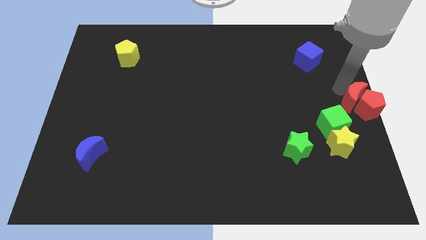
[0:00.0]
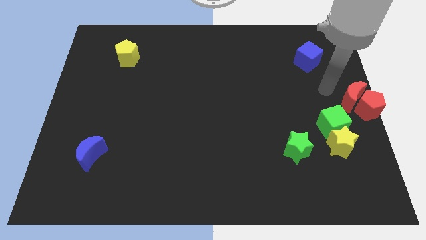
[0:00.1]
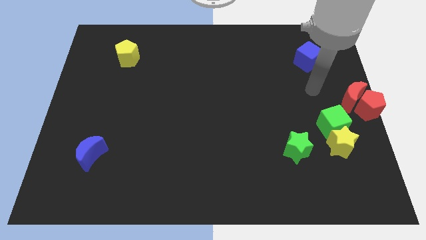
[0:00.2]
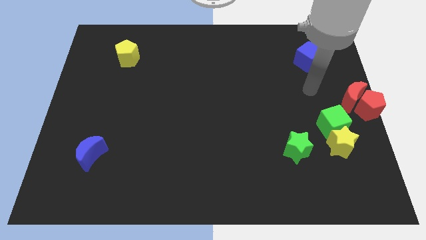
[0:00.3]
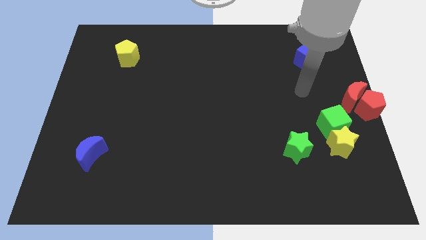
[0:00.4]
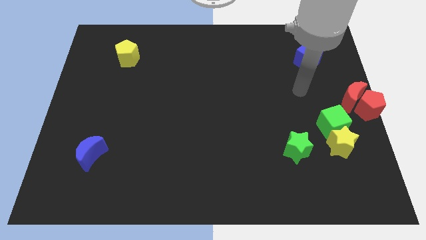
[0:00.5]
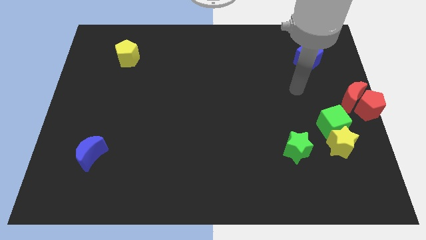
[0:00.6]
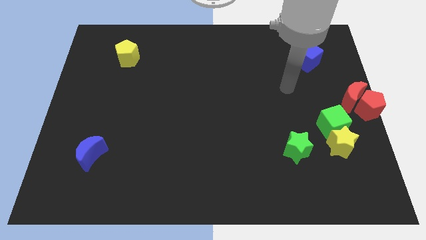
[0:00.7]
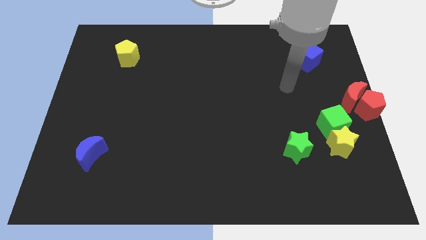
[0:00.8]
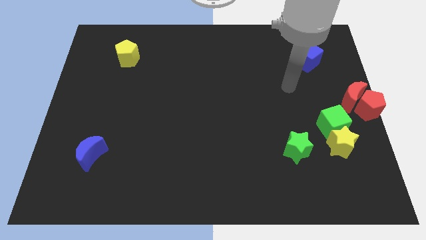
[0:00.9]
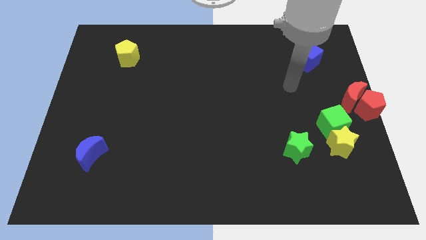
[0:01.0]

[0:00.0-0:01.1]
move your arm away from the red moon

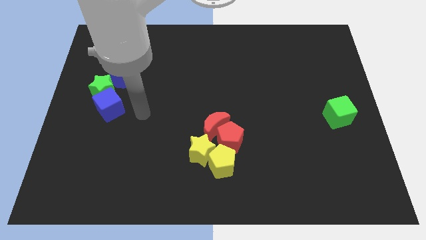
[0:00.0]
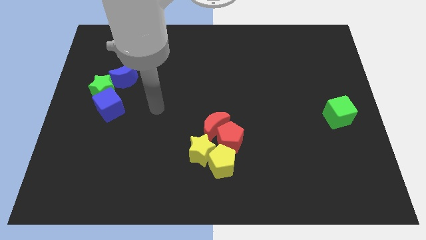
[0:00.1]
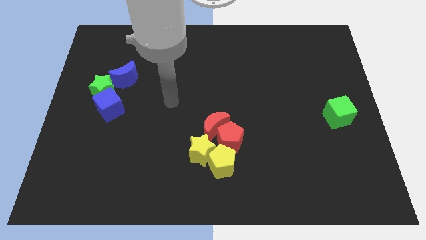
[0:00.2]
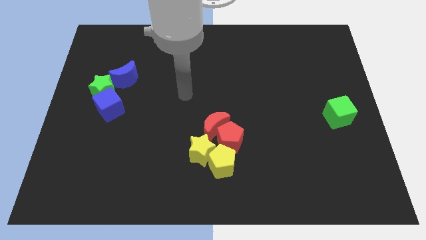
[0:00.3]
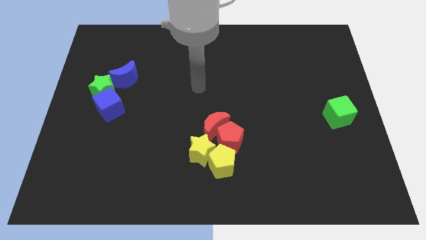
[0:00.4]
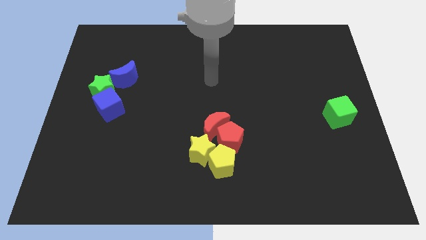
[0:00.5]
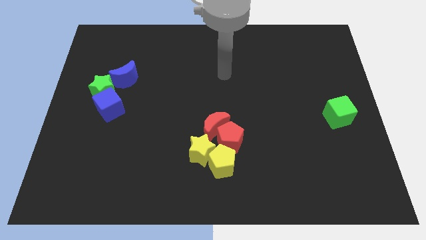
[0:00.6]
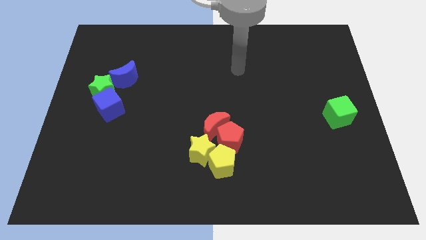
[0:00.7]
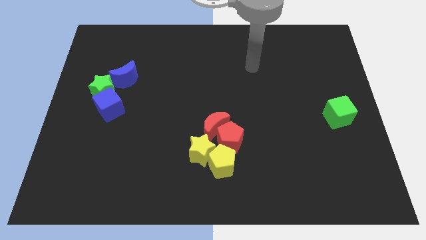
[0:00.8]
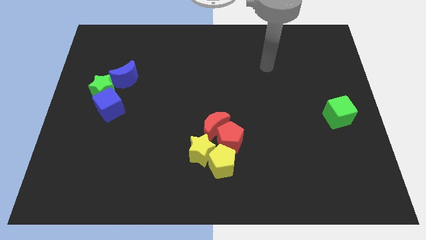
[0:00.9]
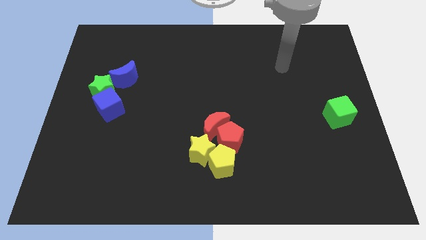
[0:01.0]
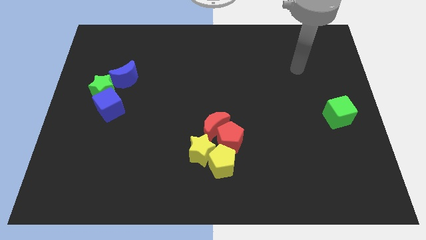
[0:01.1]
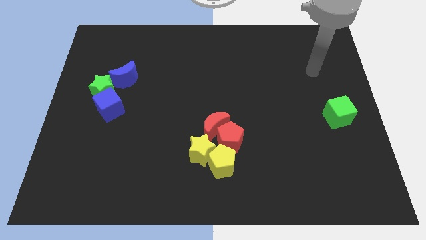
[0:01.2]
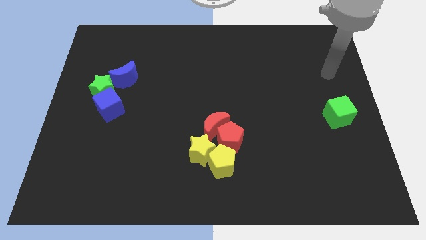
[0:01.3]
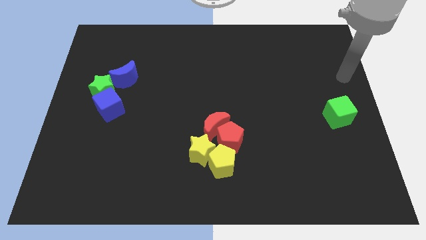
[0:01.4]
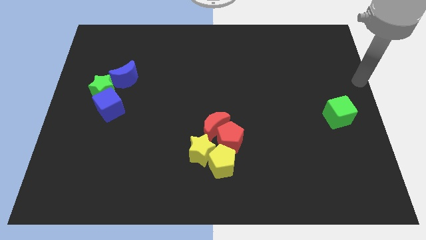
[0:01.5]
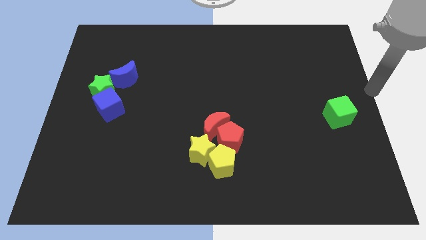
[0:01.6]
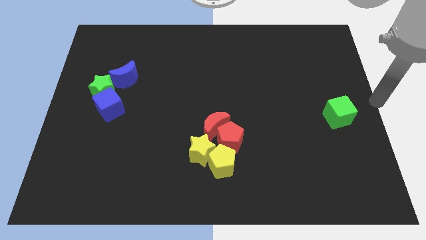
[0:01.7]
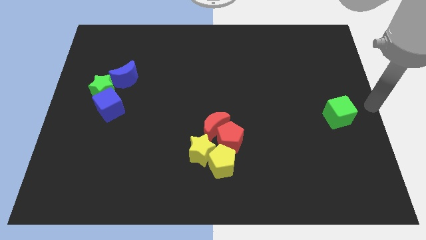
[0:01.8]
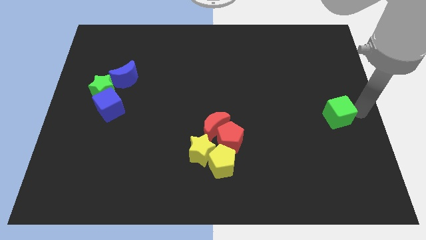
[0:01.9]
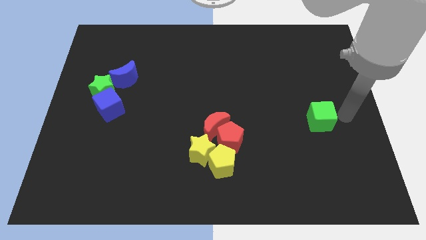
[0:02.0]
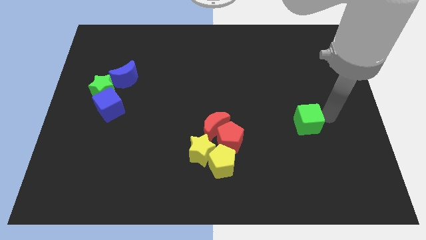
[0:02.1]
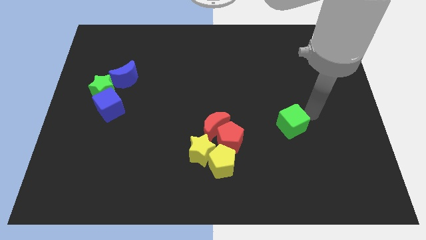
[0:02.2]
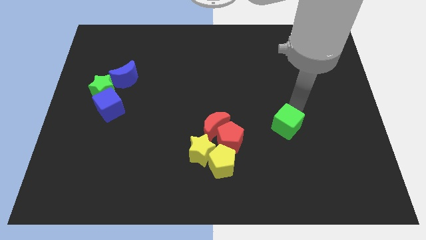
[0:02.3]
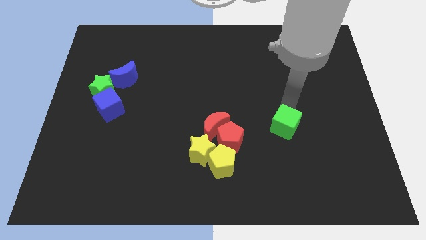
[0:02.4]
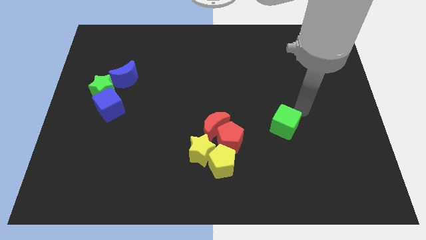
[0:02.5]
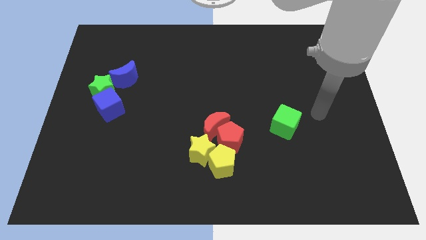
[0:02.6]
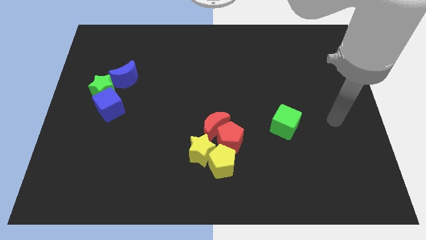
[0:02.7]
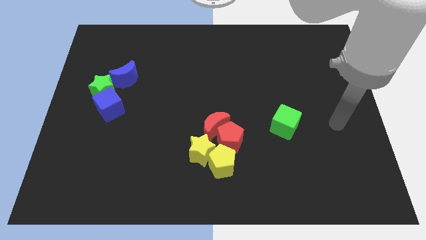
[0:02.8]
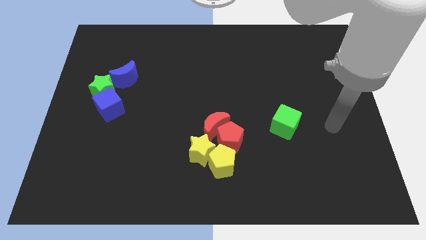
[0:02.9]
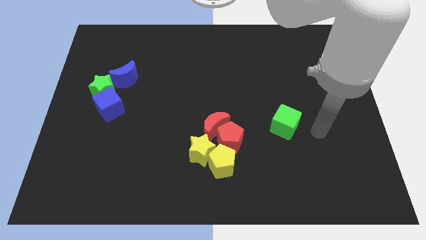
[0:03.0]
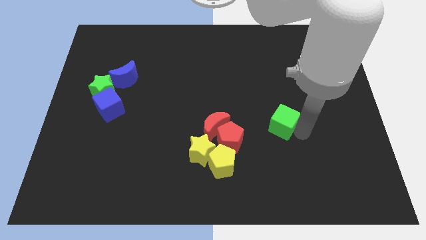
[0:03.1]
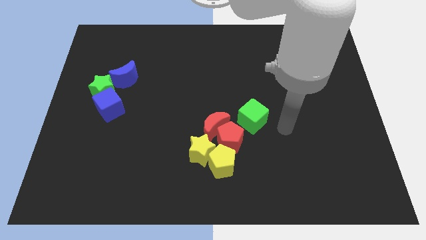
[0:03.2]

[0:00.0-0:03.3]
push the green cube towards the center

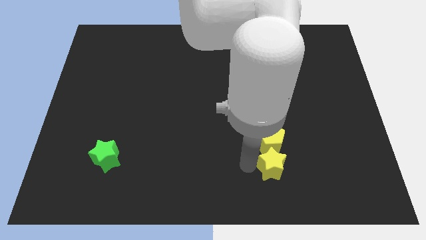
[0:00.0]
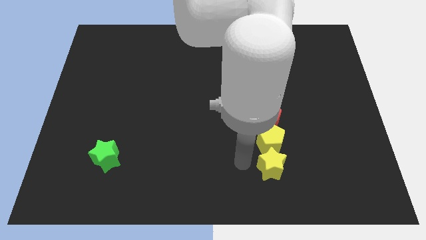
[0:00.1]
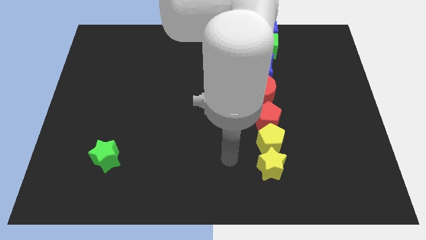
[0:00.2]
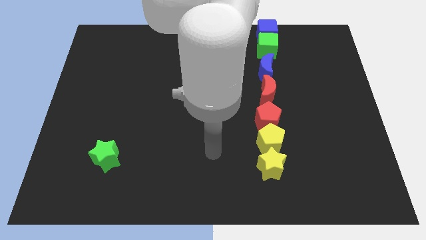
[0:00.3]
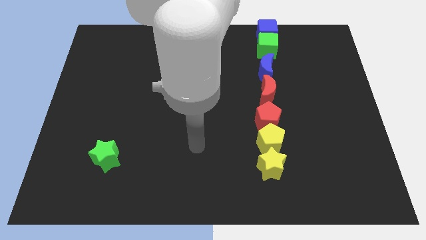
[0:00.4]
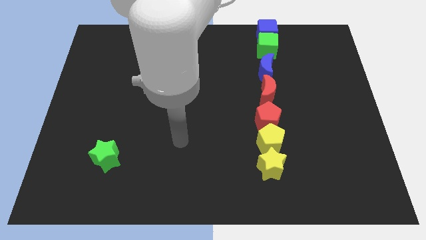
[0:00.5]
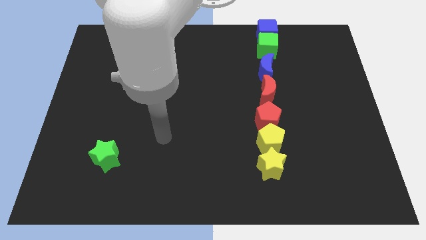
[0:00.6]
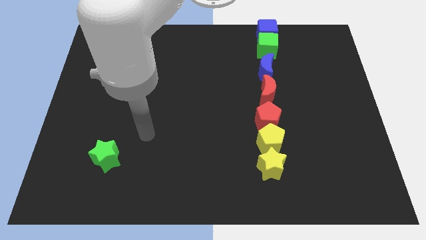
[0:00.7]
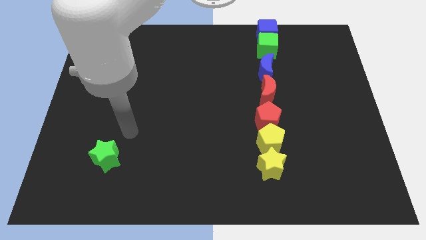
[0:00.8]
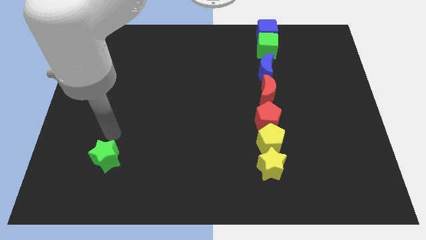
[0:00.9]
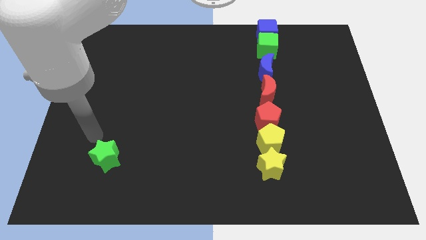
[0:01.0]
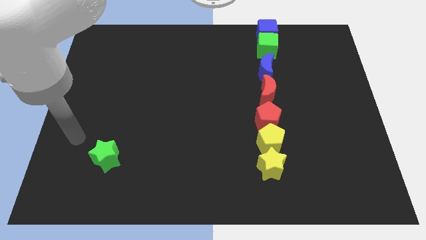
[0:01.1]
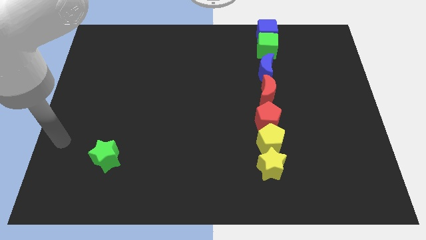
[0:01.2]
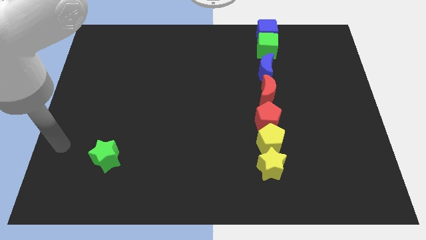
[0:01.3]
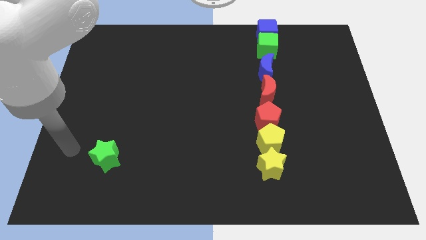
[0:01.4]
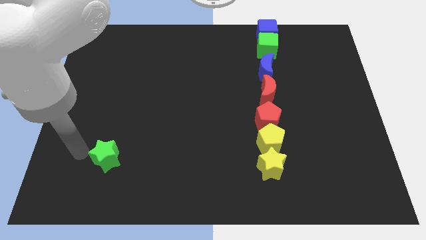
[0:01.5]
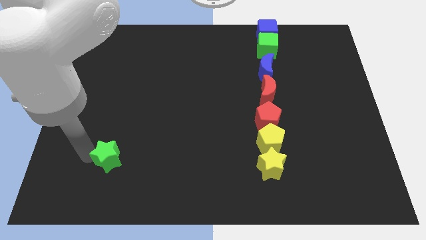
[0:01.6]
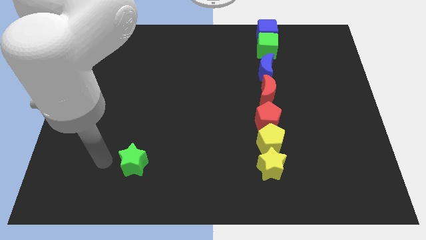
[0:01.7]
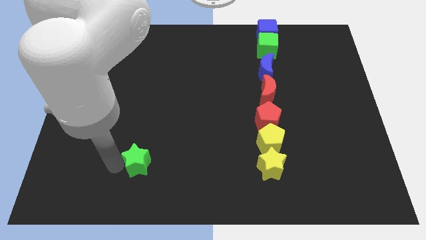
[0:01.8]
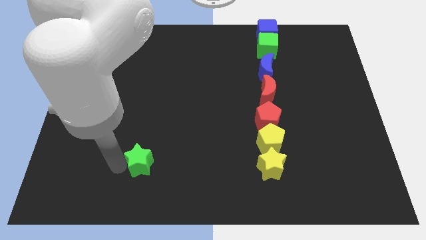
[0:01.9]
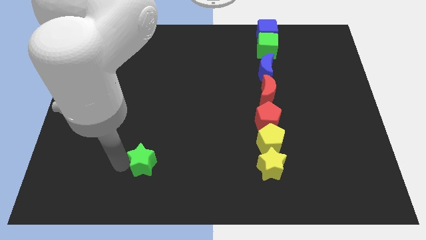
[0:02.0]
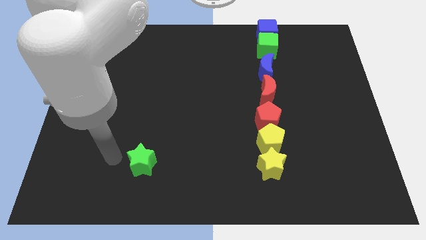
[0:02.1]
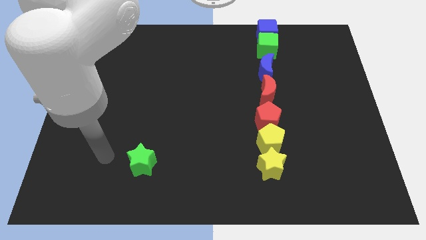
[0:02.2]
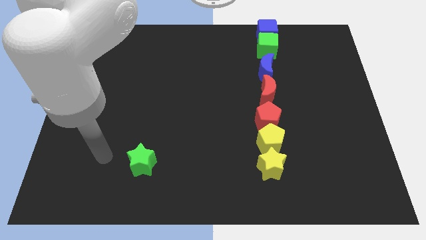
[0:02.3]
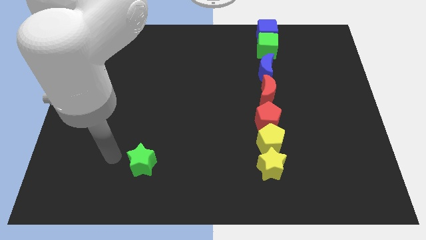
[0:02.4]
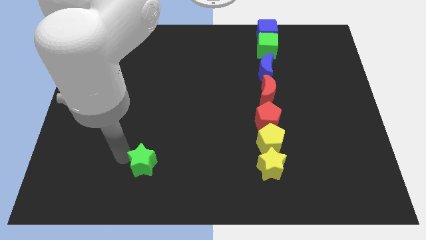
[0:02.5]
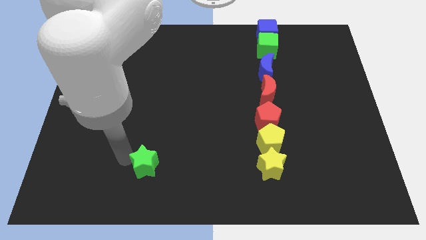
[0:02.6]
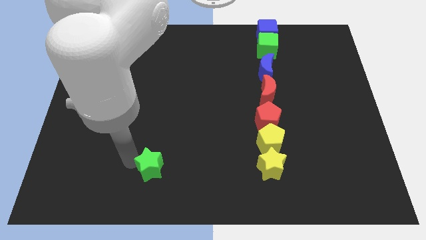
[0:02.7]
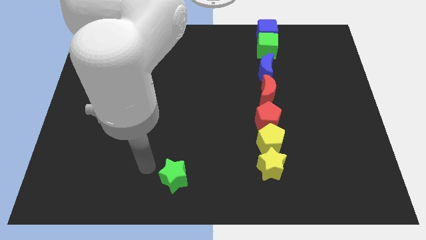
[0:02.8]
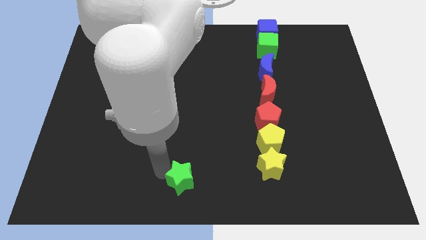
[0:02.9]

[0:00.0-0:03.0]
move the green star to the left of the yellow star

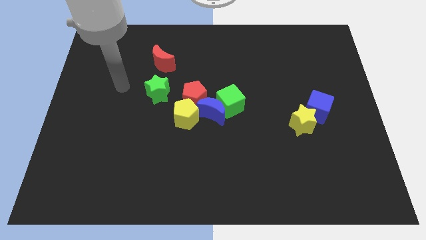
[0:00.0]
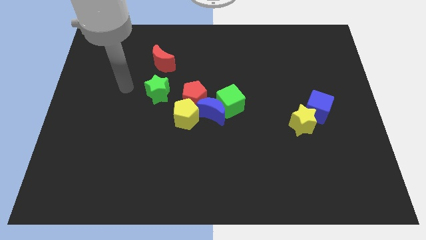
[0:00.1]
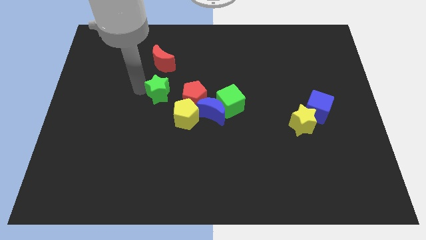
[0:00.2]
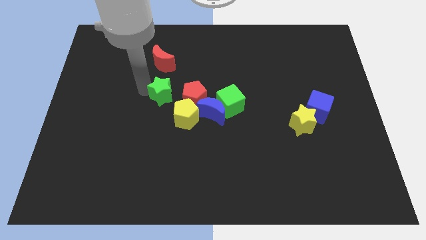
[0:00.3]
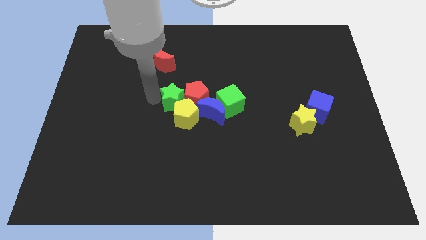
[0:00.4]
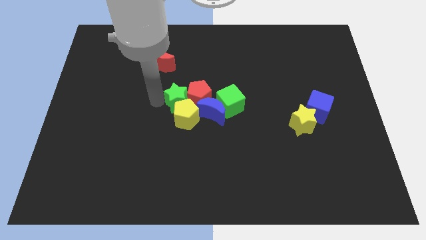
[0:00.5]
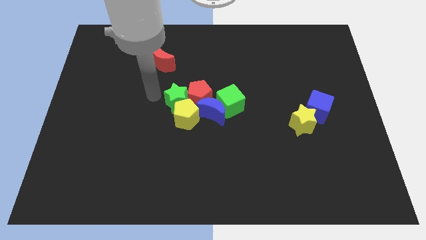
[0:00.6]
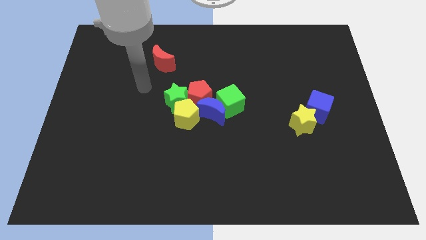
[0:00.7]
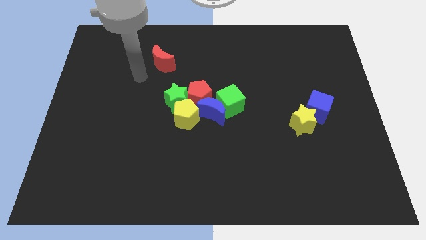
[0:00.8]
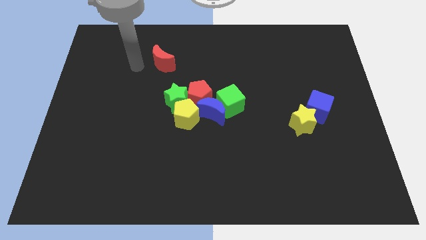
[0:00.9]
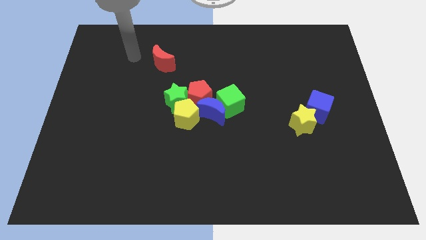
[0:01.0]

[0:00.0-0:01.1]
push green star into red pentagon

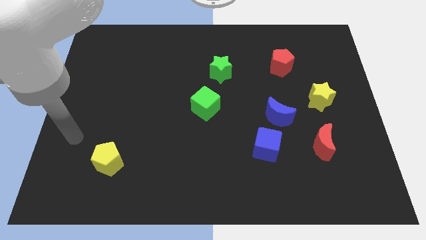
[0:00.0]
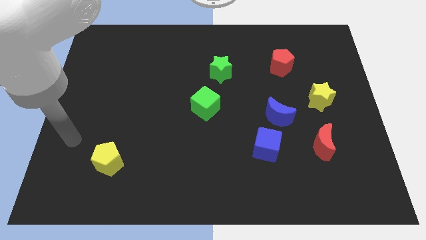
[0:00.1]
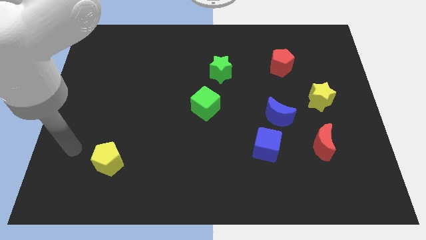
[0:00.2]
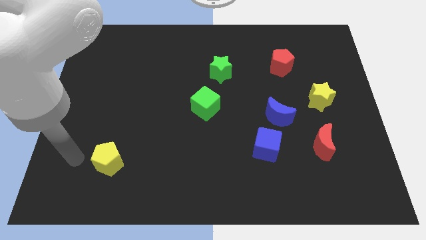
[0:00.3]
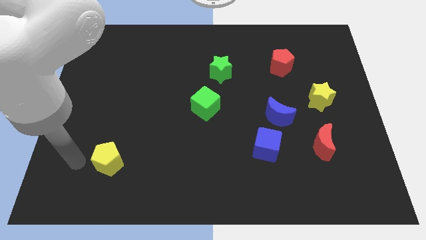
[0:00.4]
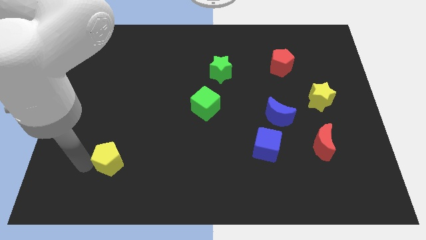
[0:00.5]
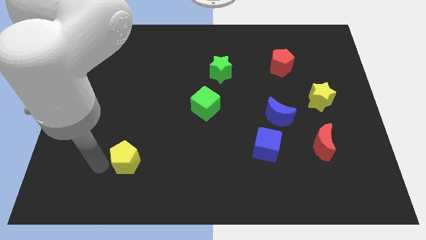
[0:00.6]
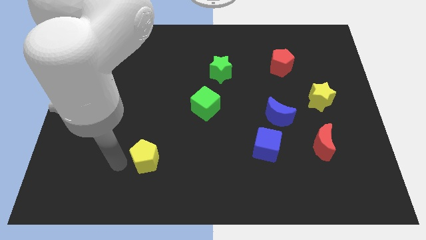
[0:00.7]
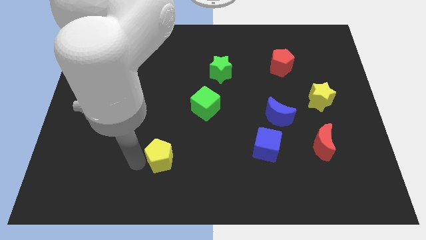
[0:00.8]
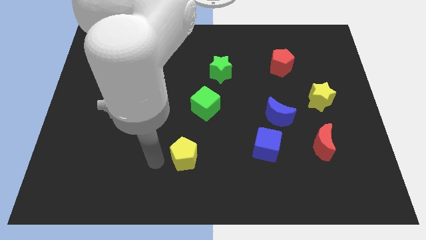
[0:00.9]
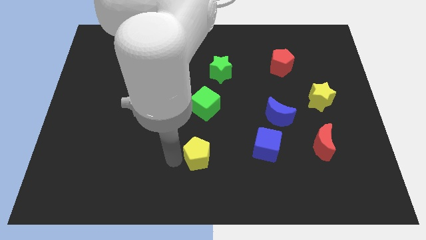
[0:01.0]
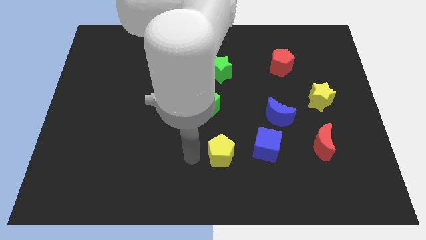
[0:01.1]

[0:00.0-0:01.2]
place the yellow pentagon down to the green cube
